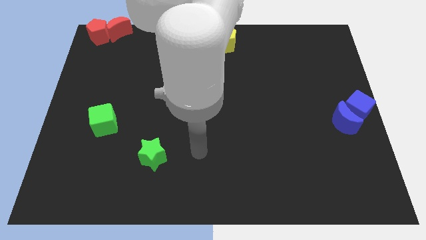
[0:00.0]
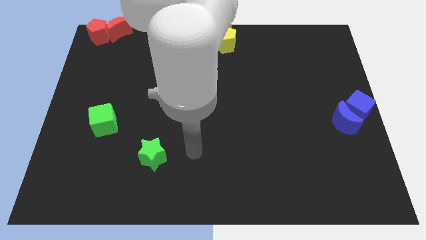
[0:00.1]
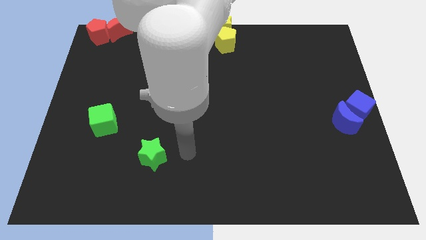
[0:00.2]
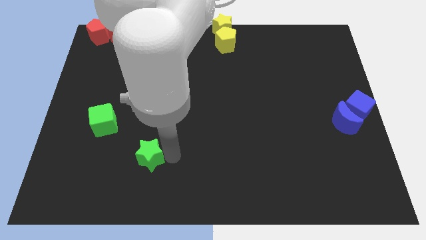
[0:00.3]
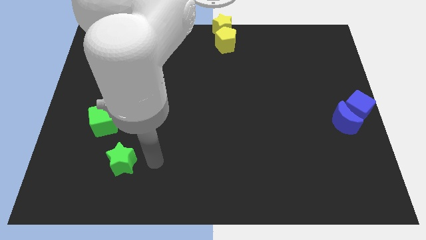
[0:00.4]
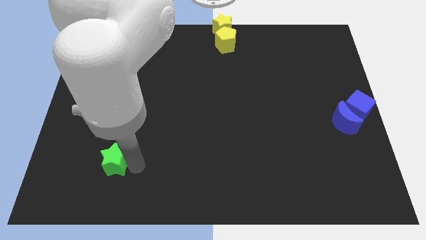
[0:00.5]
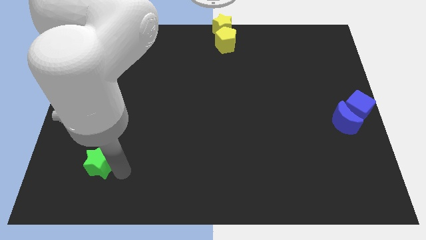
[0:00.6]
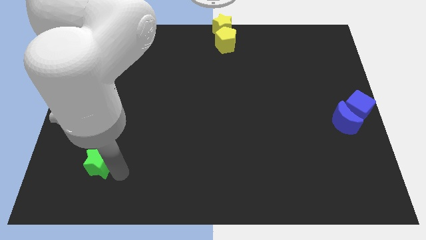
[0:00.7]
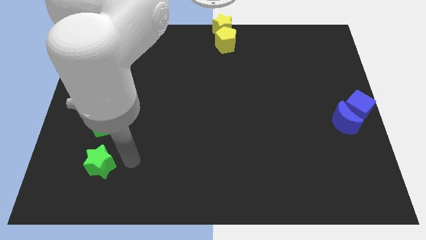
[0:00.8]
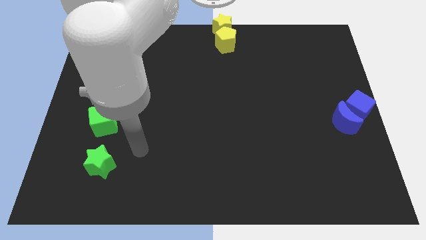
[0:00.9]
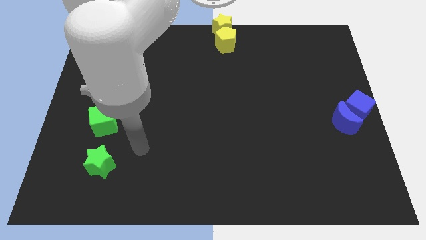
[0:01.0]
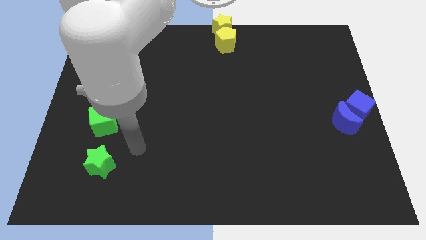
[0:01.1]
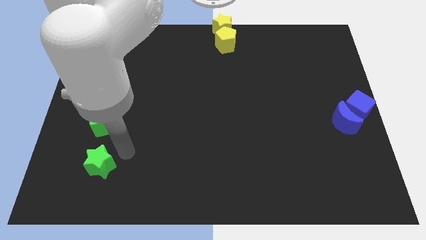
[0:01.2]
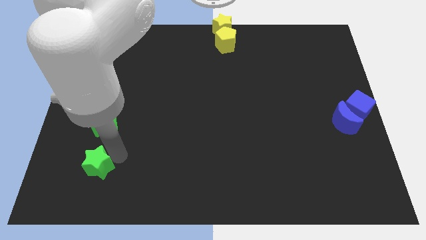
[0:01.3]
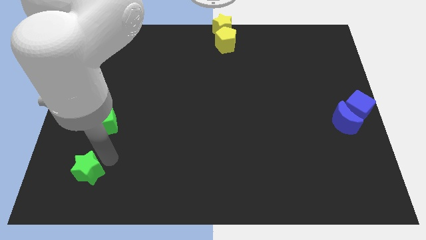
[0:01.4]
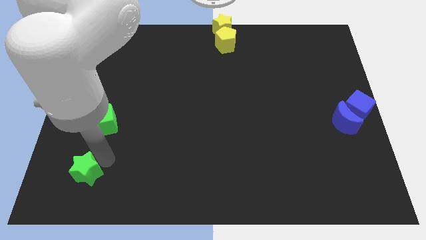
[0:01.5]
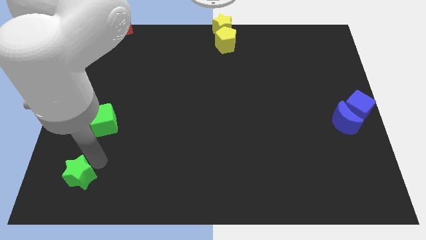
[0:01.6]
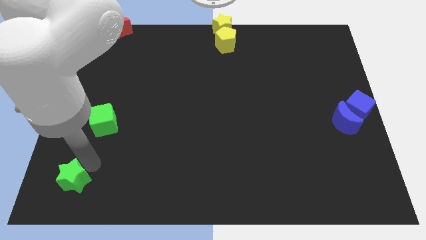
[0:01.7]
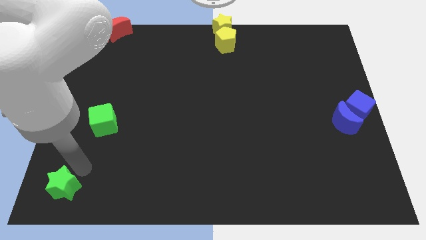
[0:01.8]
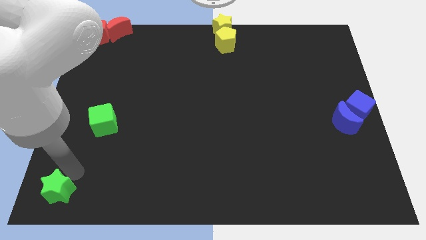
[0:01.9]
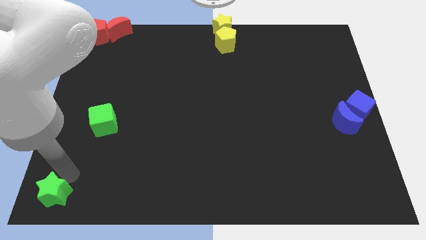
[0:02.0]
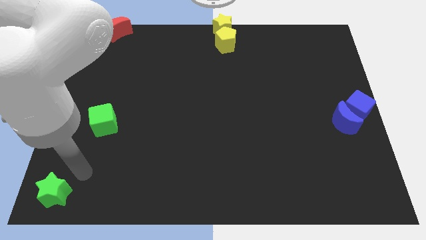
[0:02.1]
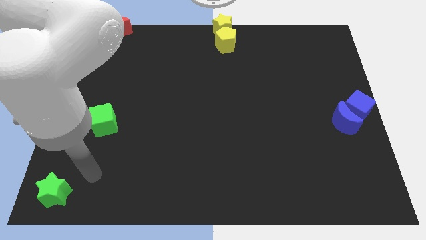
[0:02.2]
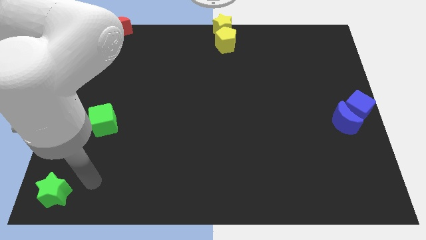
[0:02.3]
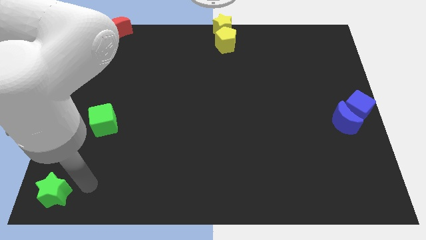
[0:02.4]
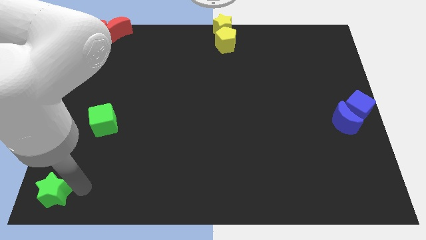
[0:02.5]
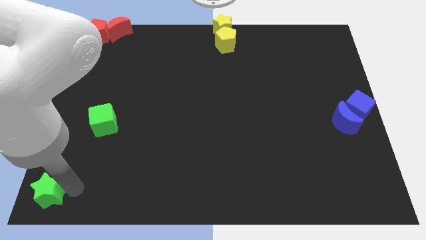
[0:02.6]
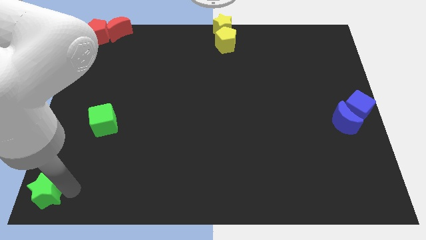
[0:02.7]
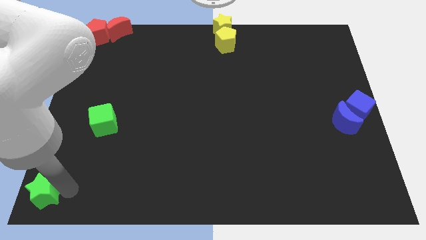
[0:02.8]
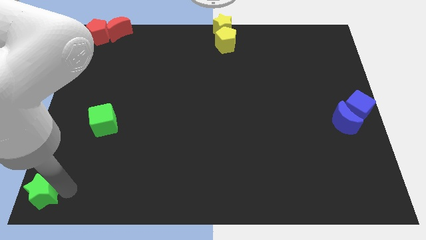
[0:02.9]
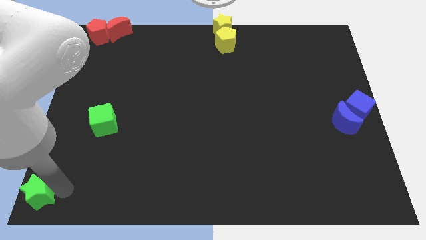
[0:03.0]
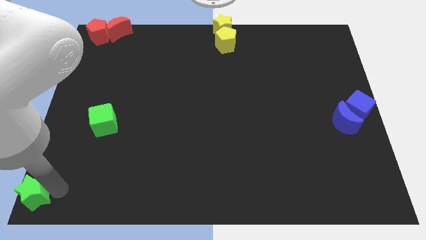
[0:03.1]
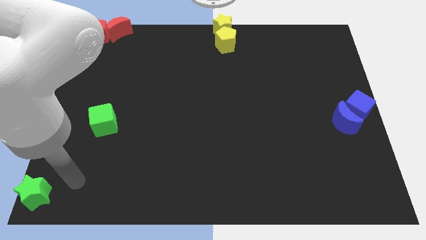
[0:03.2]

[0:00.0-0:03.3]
push the green star to the bottom left corner

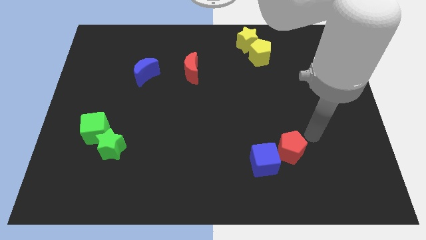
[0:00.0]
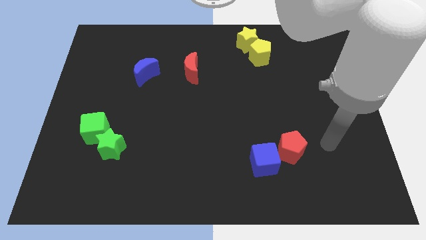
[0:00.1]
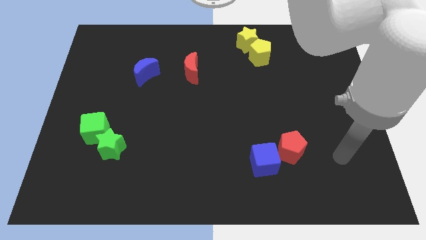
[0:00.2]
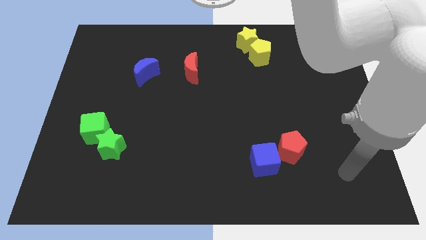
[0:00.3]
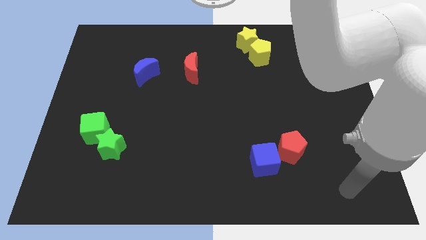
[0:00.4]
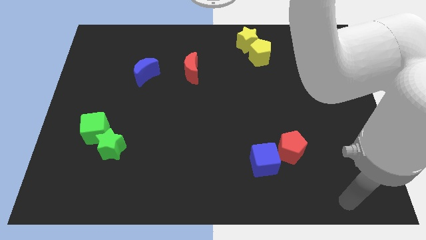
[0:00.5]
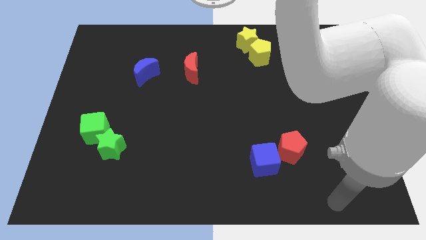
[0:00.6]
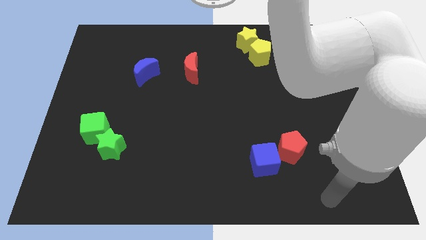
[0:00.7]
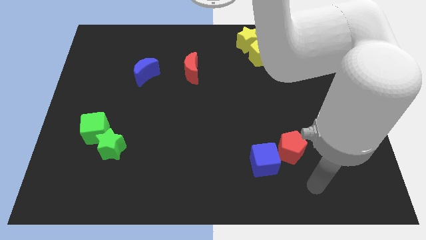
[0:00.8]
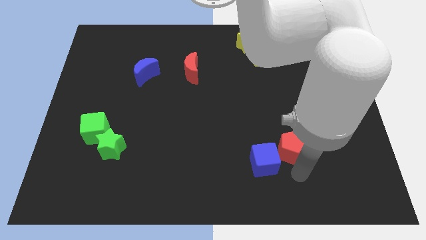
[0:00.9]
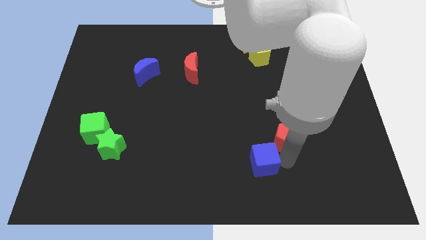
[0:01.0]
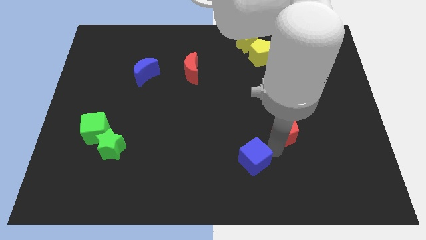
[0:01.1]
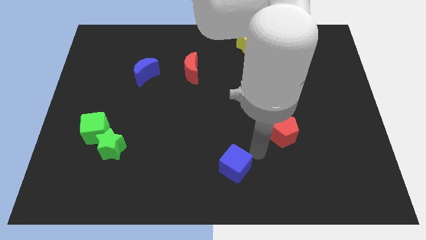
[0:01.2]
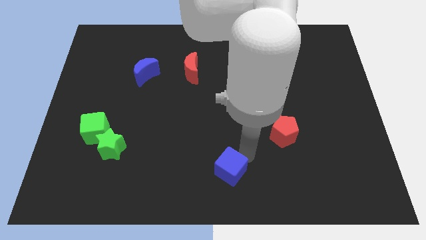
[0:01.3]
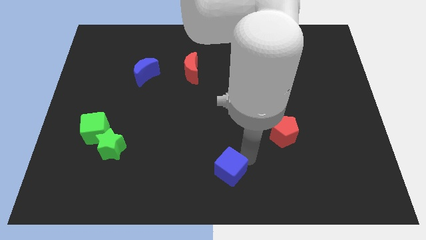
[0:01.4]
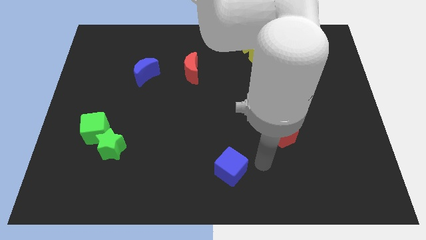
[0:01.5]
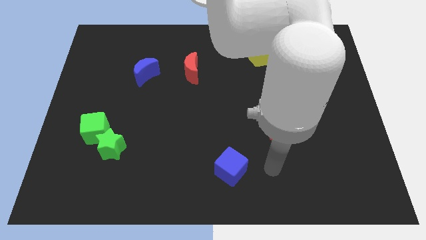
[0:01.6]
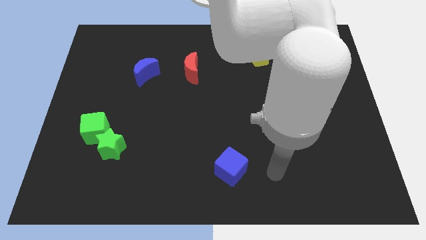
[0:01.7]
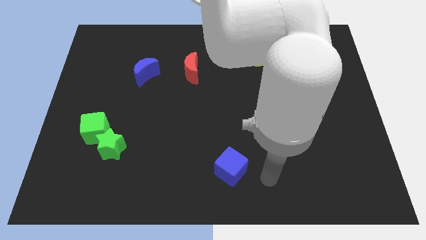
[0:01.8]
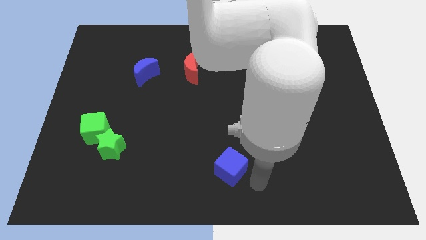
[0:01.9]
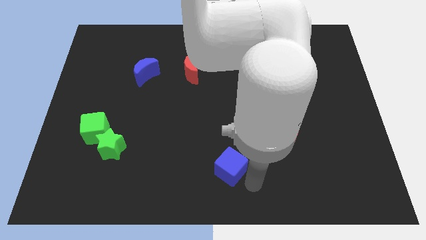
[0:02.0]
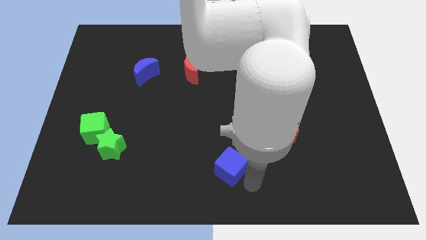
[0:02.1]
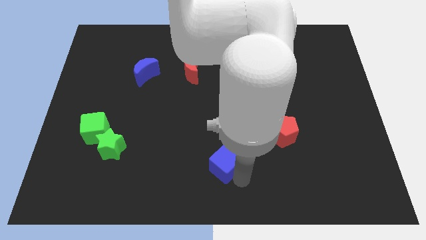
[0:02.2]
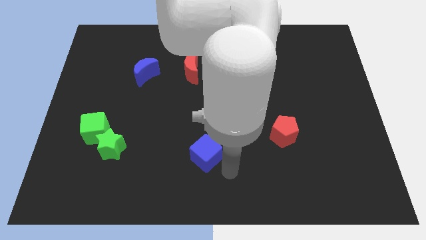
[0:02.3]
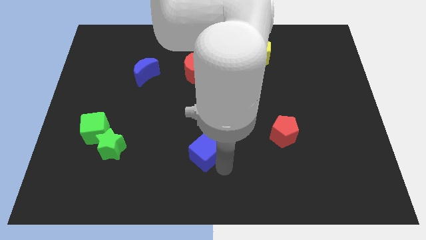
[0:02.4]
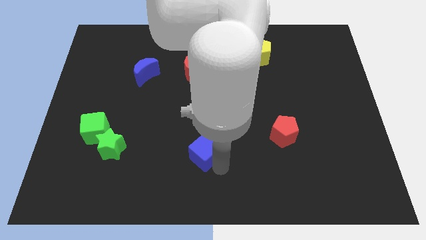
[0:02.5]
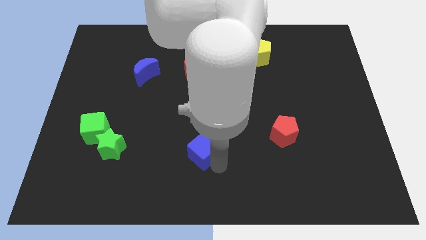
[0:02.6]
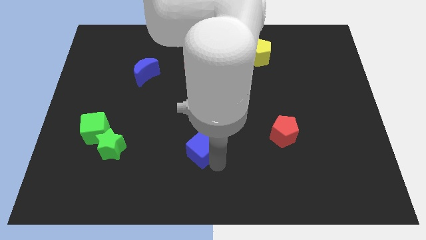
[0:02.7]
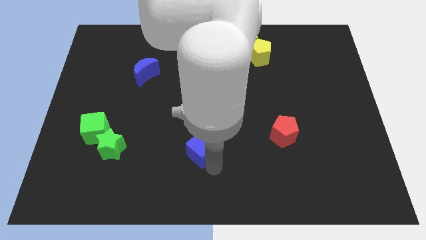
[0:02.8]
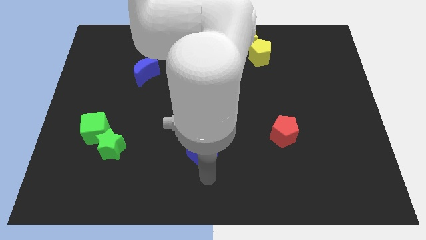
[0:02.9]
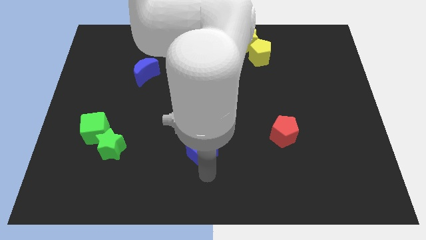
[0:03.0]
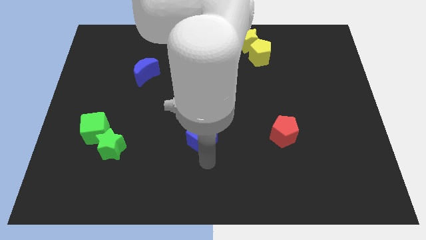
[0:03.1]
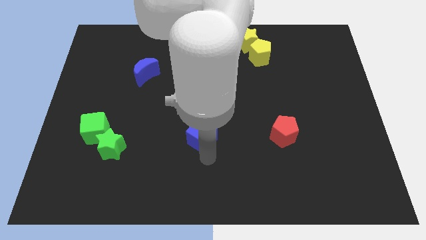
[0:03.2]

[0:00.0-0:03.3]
push the blue cube to the left of the red pentagon

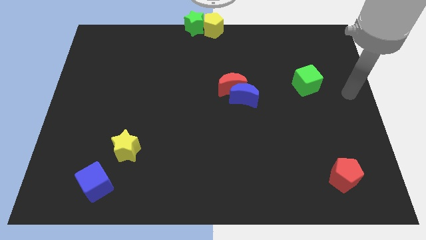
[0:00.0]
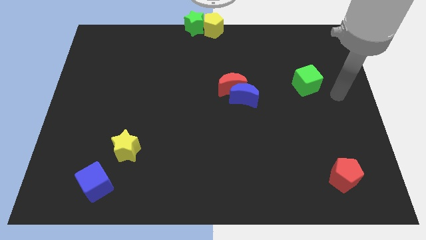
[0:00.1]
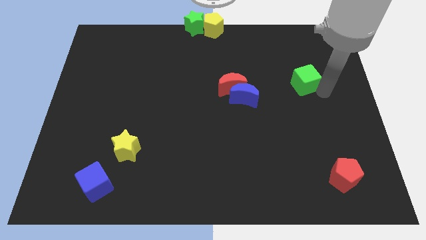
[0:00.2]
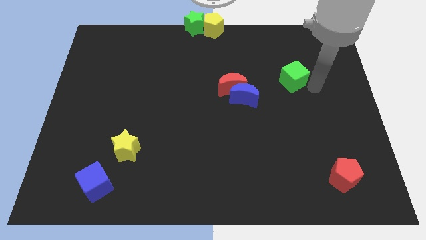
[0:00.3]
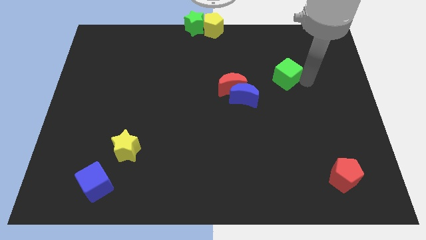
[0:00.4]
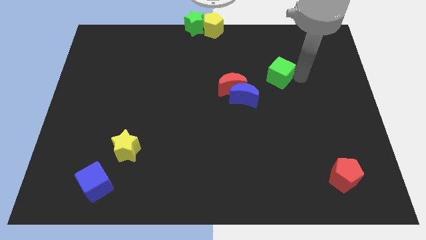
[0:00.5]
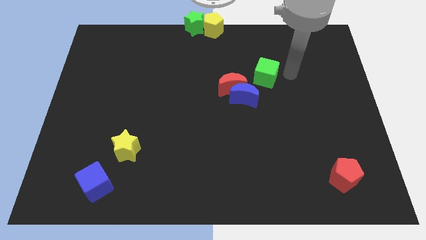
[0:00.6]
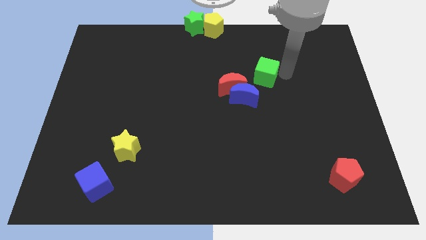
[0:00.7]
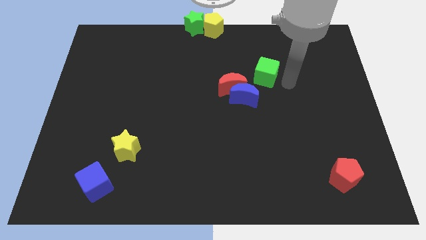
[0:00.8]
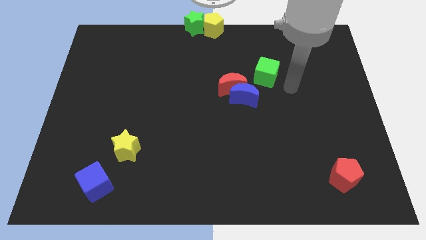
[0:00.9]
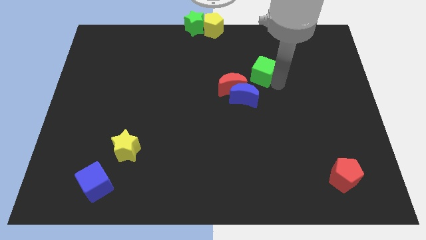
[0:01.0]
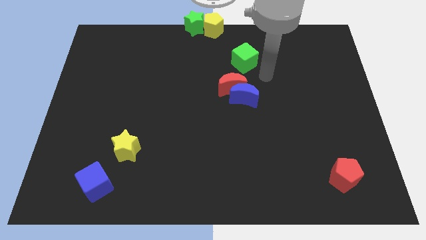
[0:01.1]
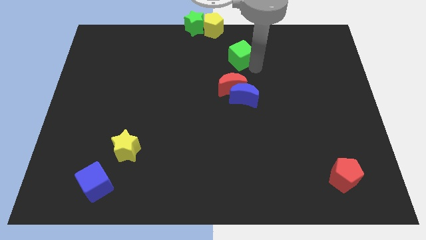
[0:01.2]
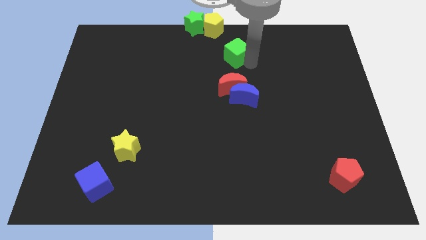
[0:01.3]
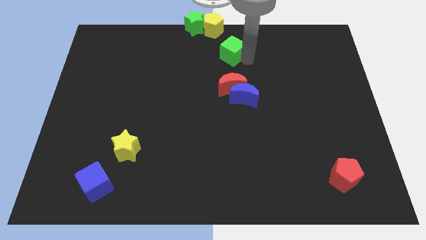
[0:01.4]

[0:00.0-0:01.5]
place the green cube vertically above the red crescent

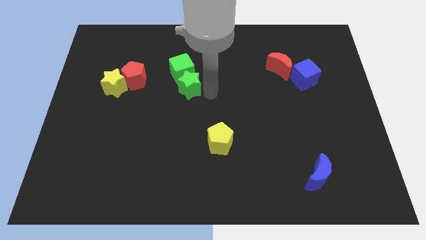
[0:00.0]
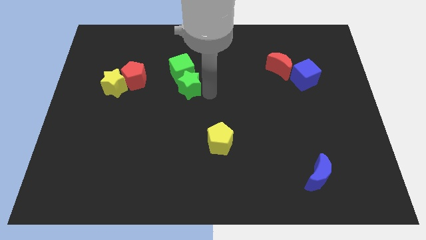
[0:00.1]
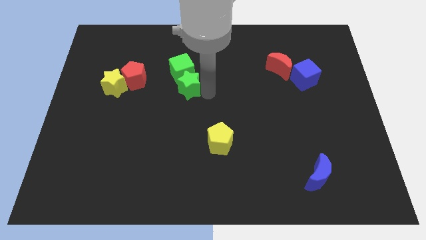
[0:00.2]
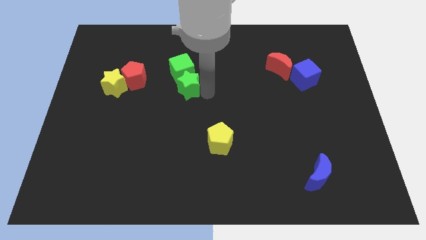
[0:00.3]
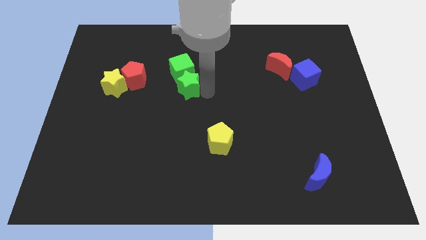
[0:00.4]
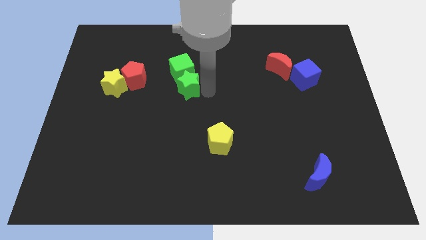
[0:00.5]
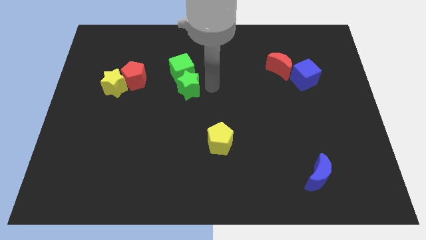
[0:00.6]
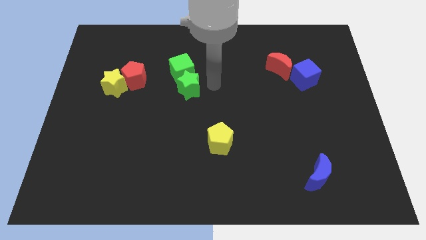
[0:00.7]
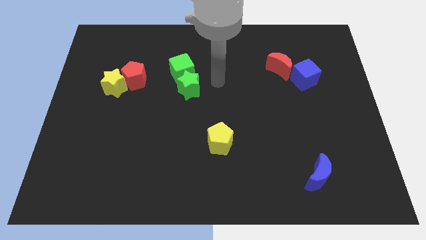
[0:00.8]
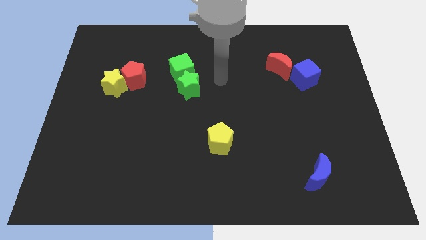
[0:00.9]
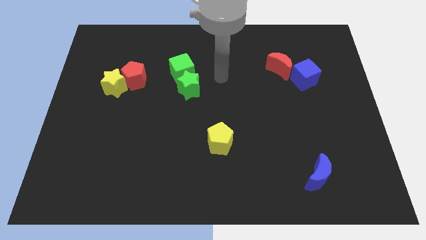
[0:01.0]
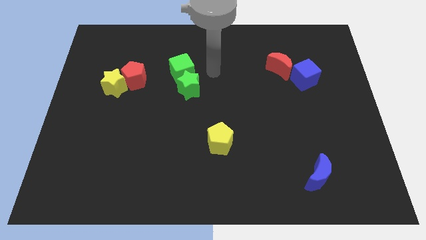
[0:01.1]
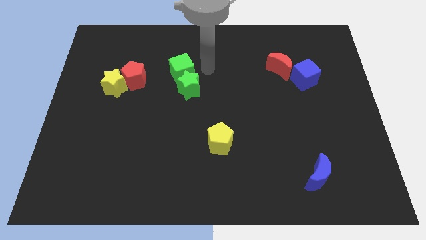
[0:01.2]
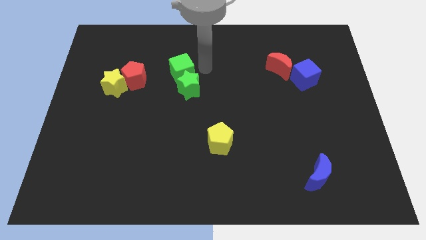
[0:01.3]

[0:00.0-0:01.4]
touch the green star
